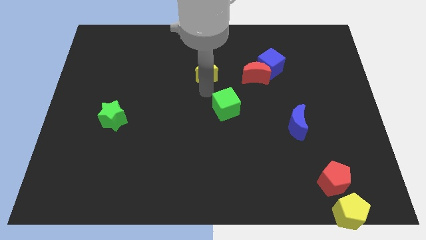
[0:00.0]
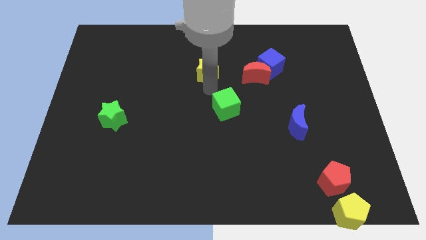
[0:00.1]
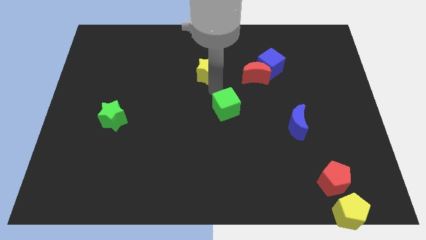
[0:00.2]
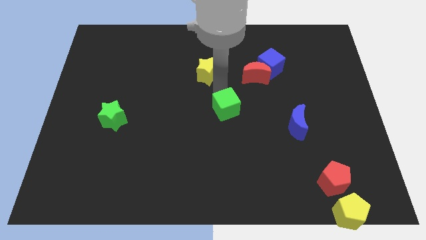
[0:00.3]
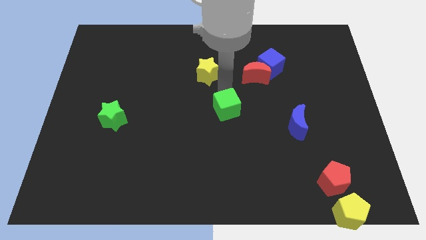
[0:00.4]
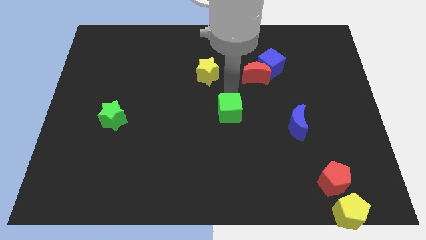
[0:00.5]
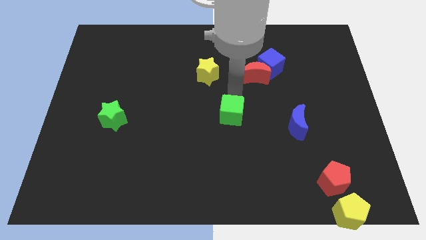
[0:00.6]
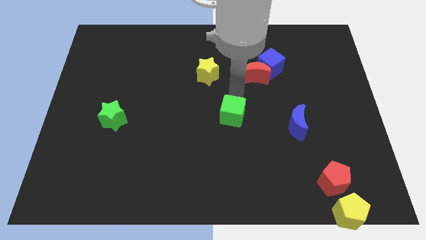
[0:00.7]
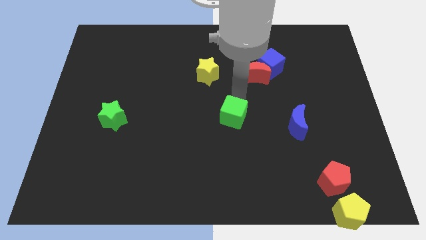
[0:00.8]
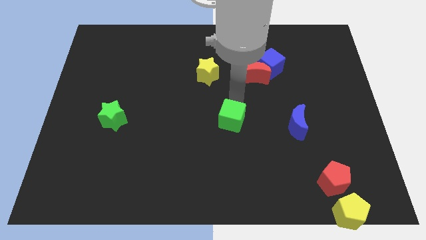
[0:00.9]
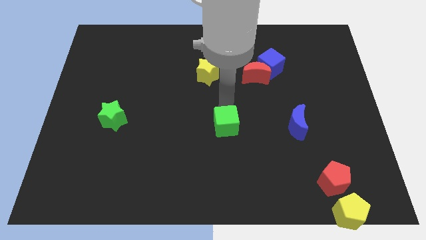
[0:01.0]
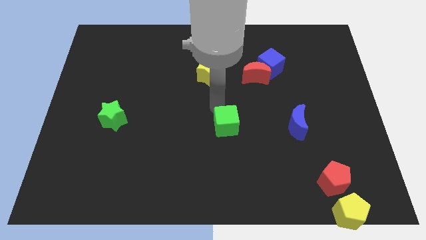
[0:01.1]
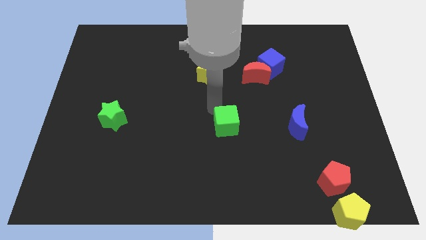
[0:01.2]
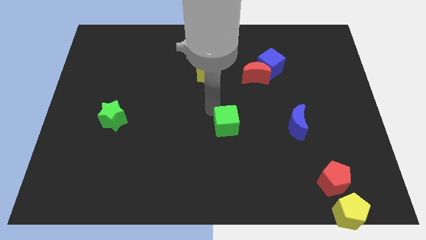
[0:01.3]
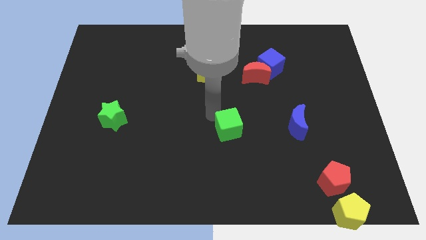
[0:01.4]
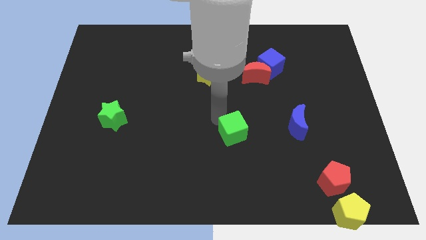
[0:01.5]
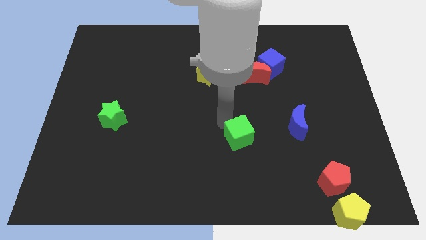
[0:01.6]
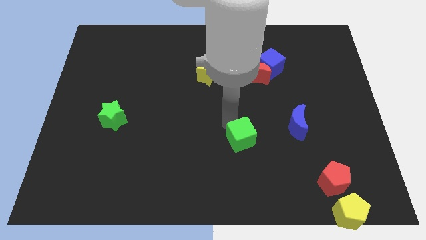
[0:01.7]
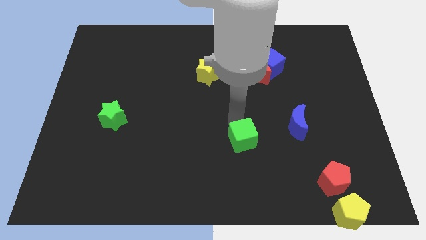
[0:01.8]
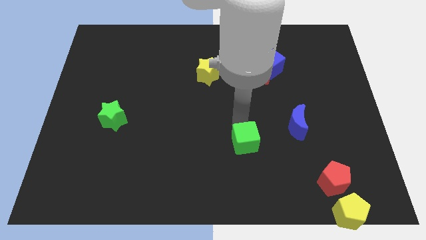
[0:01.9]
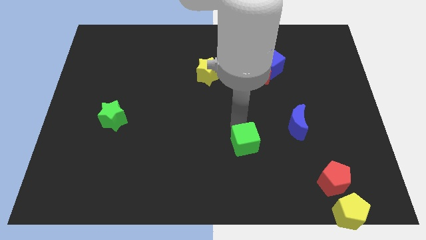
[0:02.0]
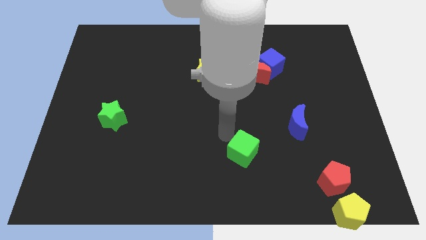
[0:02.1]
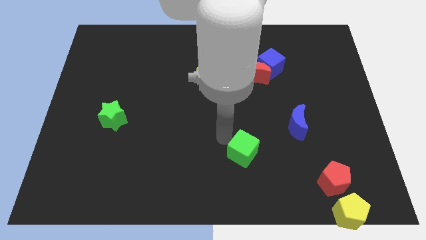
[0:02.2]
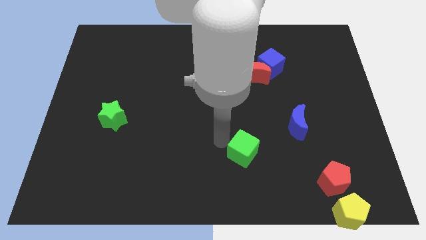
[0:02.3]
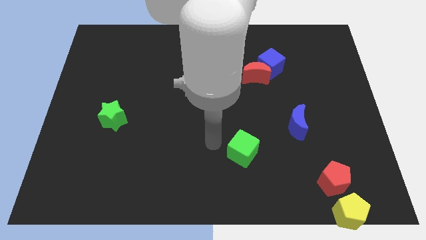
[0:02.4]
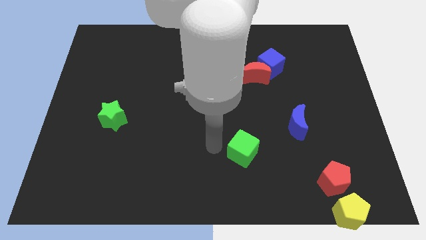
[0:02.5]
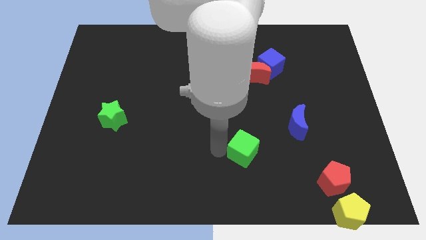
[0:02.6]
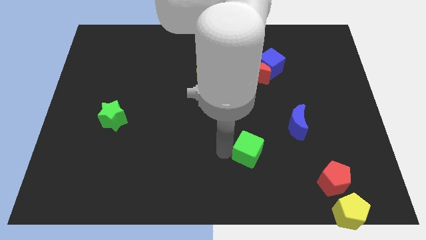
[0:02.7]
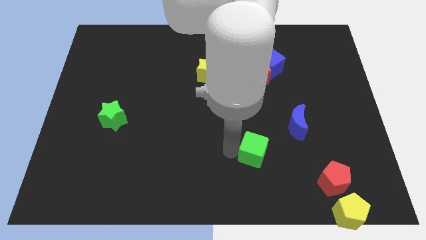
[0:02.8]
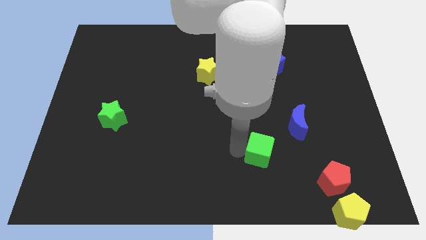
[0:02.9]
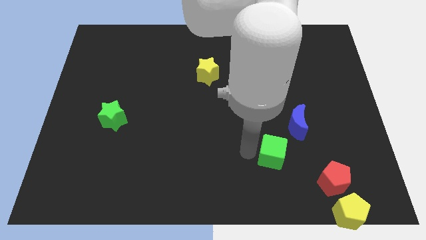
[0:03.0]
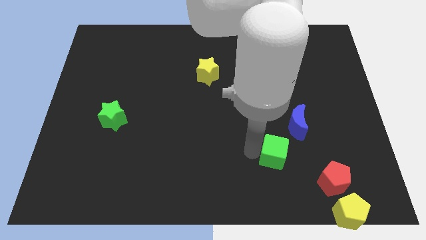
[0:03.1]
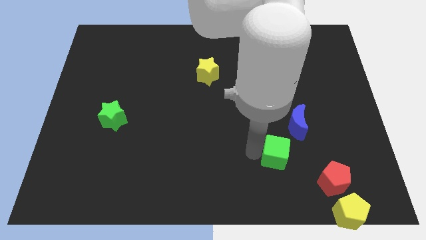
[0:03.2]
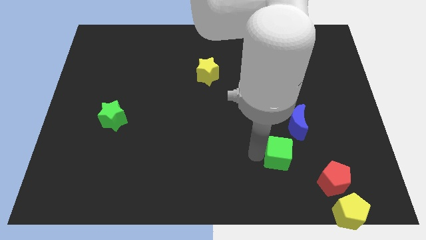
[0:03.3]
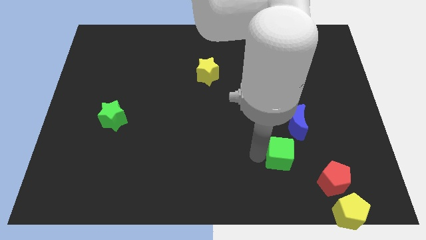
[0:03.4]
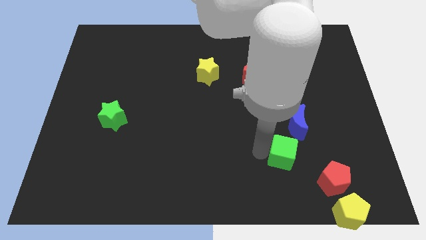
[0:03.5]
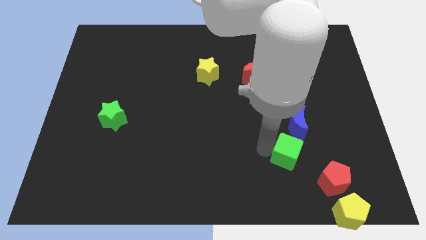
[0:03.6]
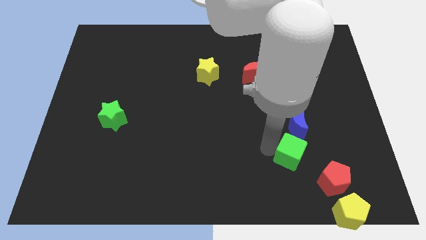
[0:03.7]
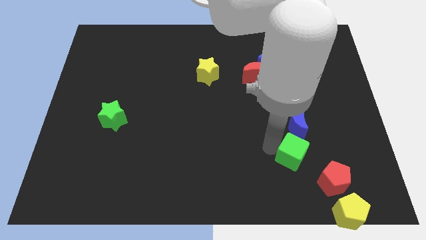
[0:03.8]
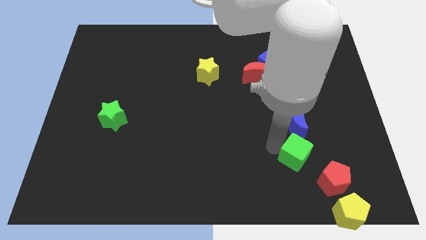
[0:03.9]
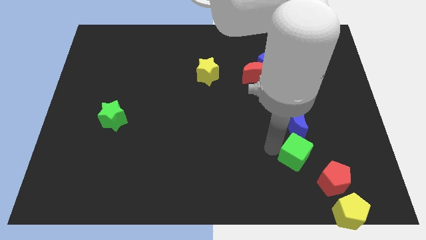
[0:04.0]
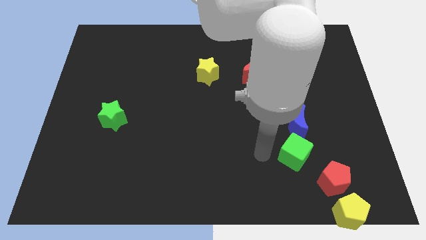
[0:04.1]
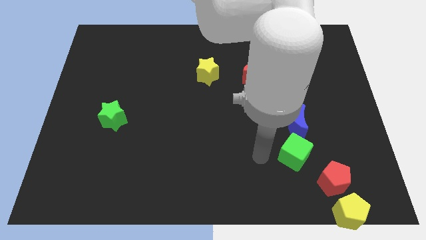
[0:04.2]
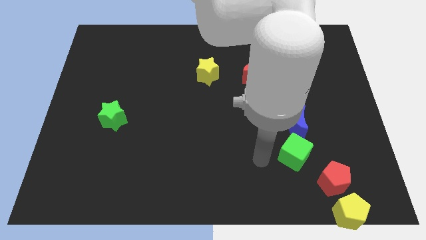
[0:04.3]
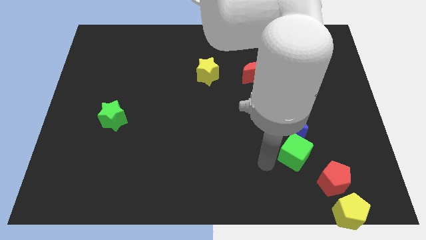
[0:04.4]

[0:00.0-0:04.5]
move the green cube to the bottom of the blue crescent

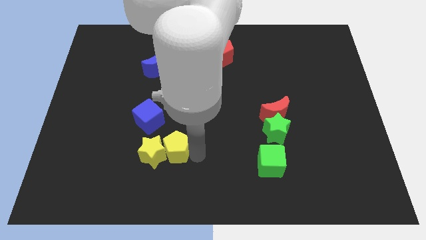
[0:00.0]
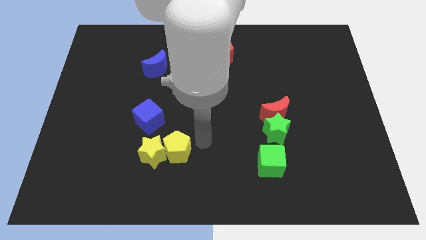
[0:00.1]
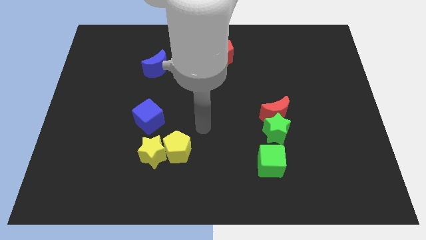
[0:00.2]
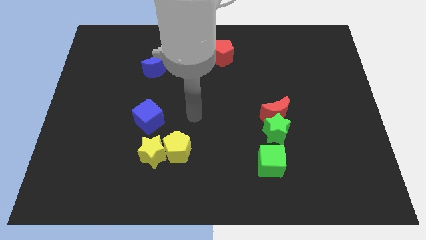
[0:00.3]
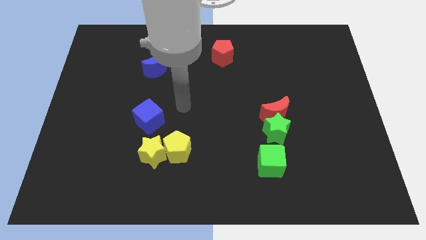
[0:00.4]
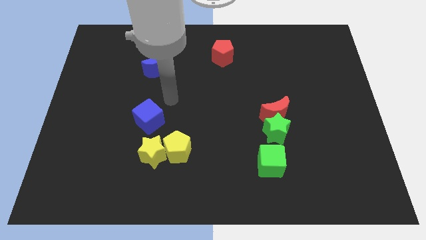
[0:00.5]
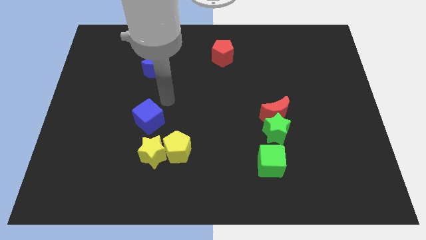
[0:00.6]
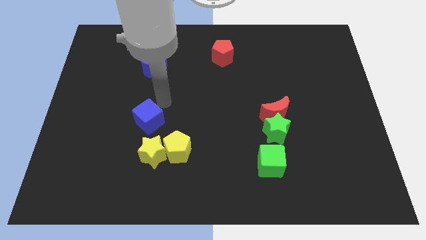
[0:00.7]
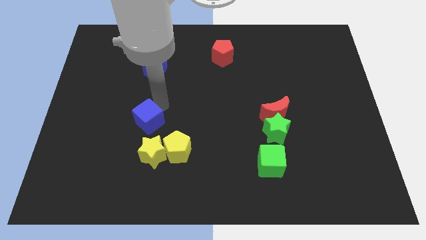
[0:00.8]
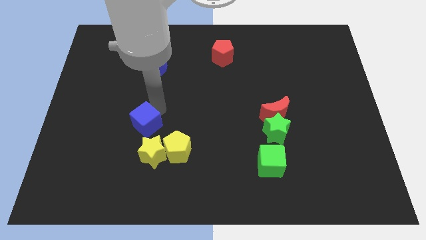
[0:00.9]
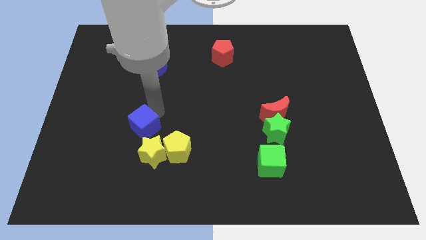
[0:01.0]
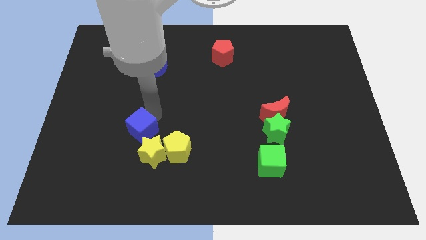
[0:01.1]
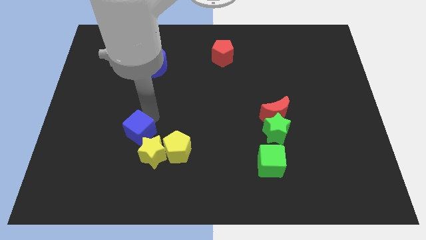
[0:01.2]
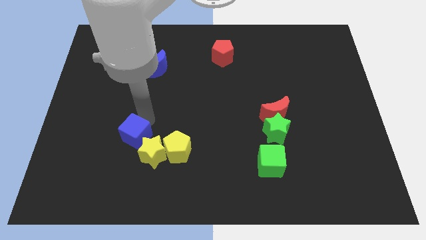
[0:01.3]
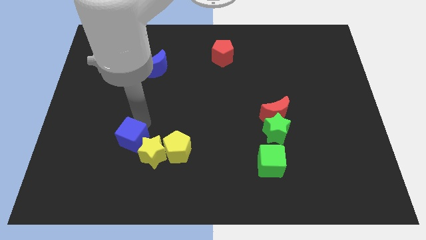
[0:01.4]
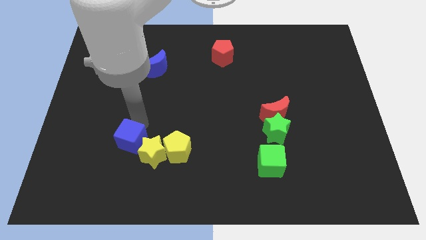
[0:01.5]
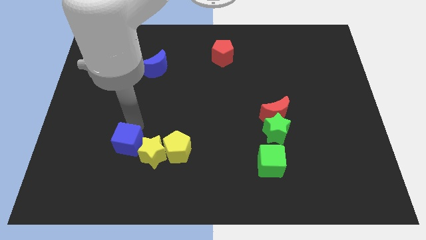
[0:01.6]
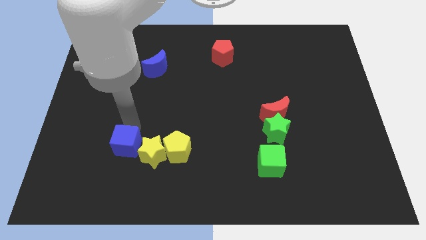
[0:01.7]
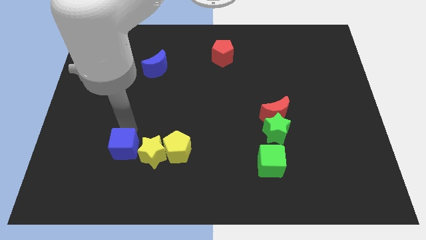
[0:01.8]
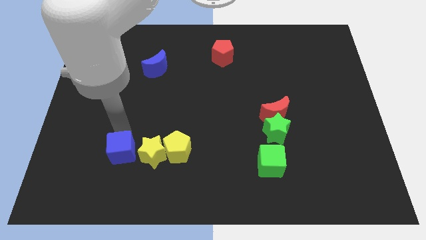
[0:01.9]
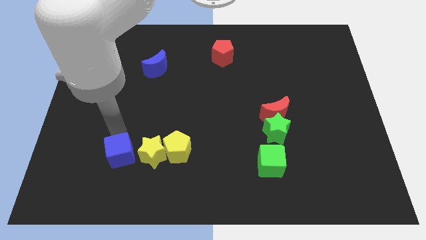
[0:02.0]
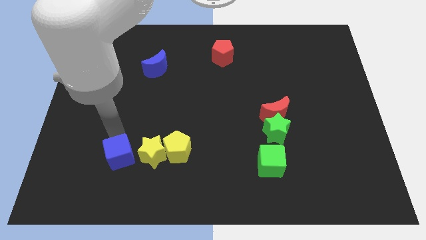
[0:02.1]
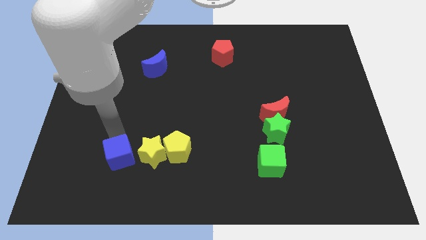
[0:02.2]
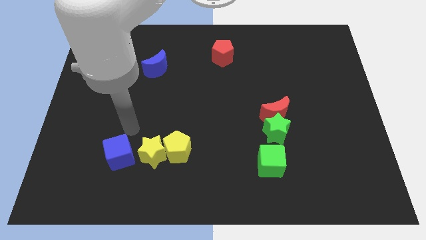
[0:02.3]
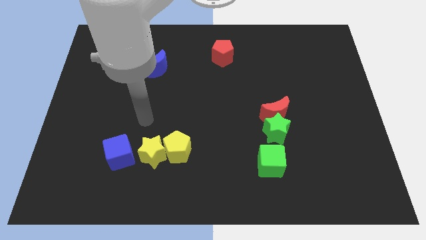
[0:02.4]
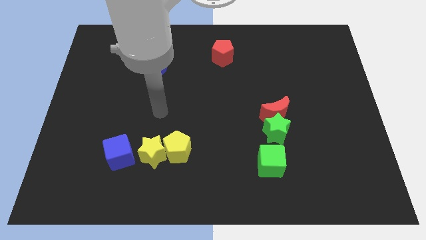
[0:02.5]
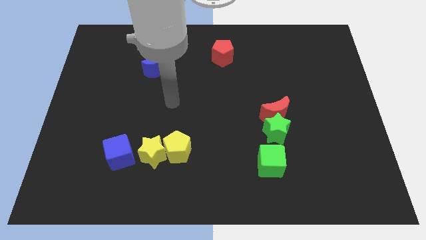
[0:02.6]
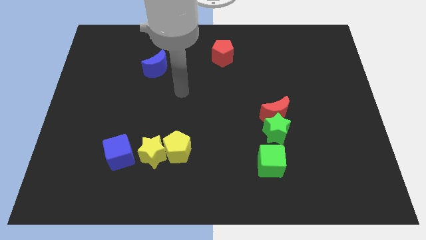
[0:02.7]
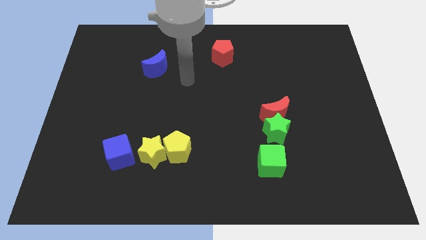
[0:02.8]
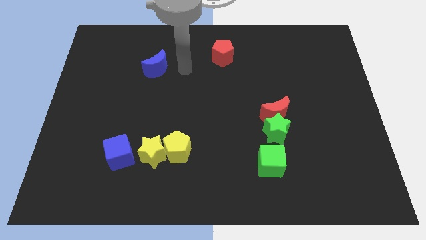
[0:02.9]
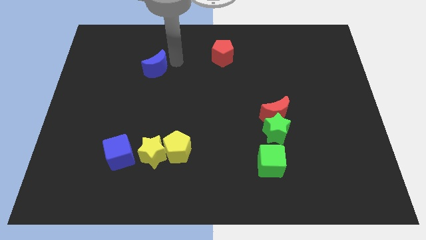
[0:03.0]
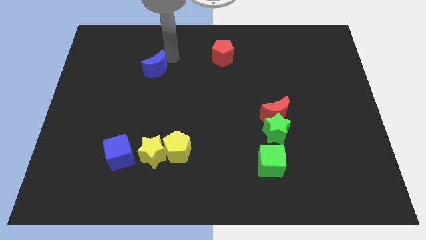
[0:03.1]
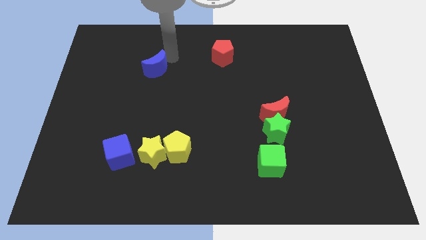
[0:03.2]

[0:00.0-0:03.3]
put the blue cube to the left of the yellow star

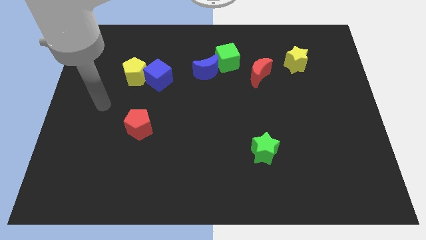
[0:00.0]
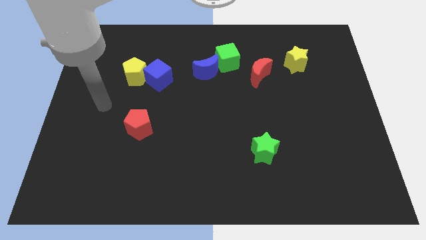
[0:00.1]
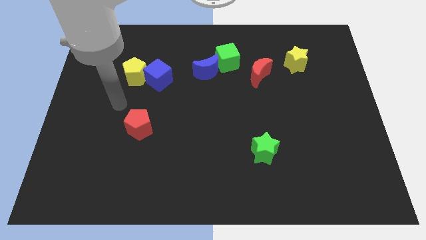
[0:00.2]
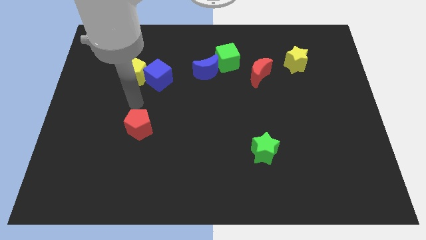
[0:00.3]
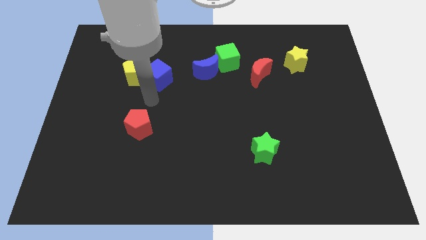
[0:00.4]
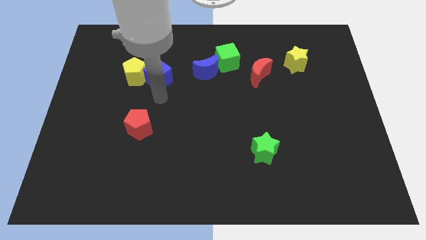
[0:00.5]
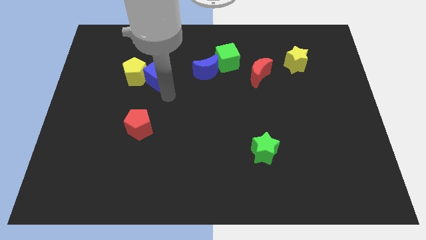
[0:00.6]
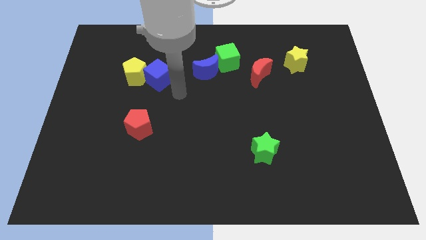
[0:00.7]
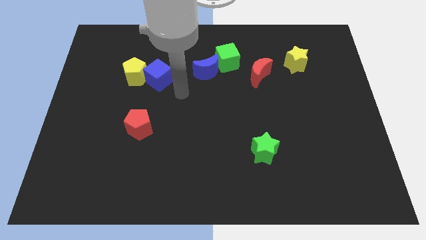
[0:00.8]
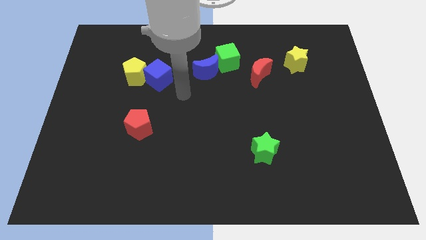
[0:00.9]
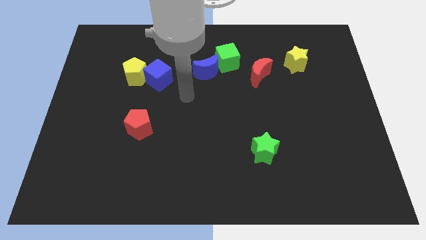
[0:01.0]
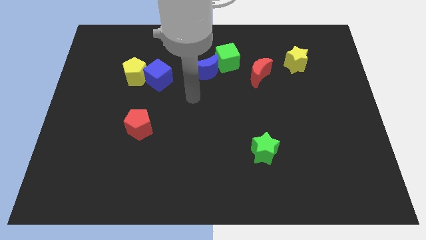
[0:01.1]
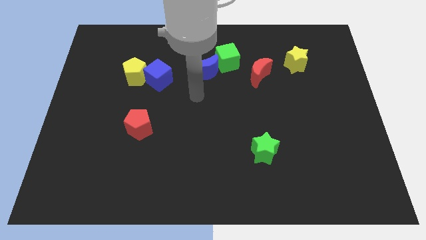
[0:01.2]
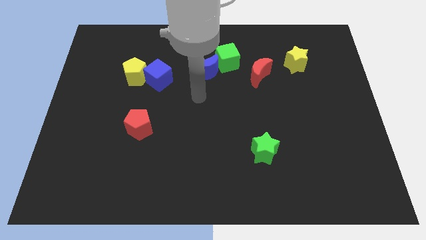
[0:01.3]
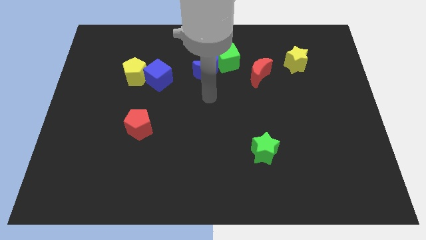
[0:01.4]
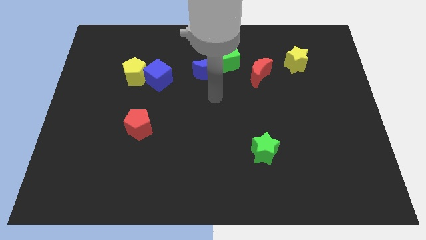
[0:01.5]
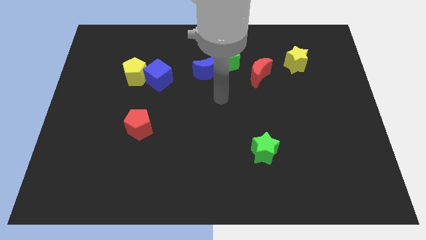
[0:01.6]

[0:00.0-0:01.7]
put your arm at the center of the board
